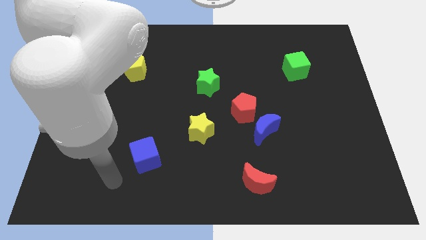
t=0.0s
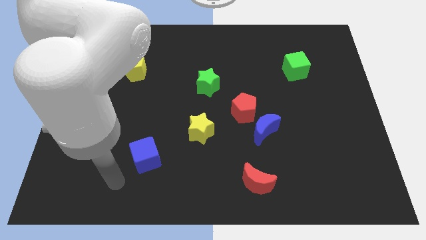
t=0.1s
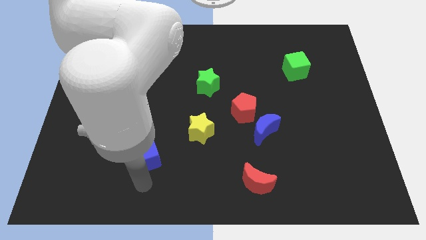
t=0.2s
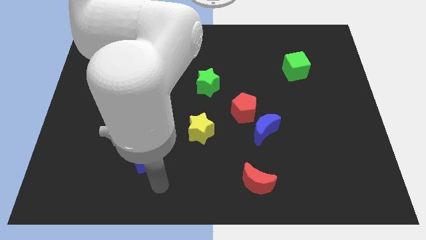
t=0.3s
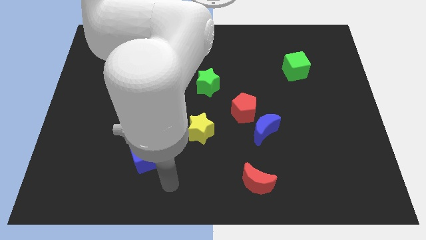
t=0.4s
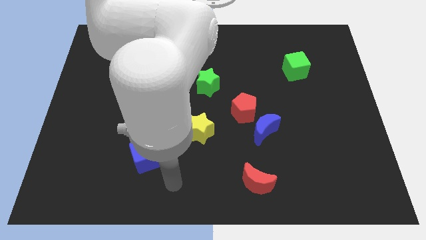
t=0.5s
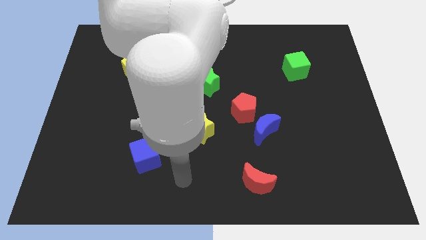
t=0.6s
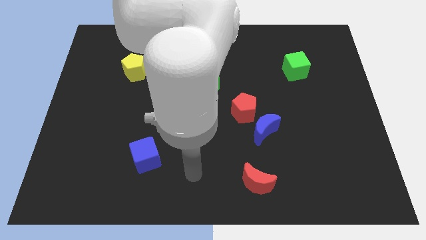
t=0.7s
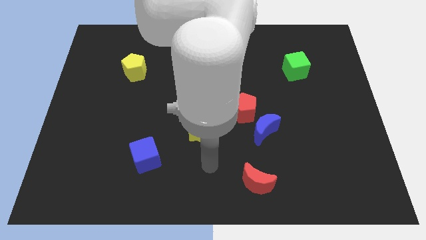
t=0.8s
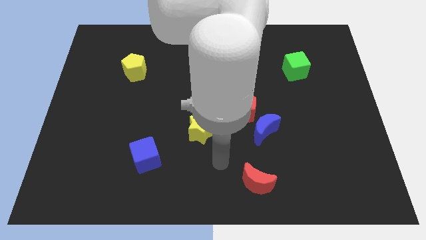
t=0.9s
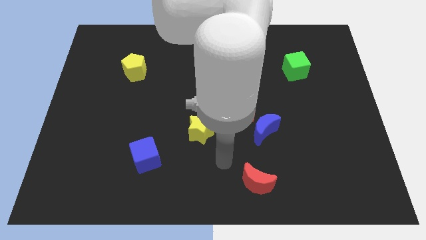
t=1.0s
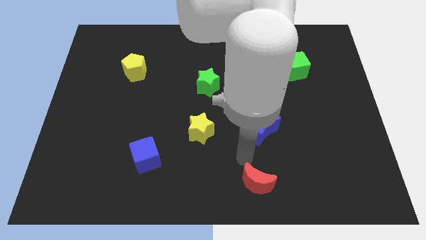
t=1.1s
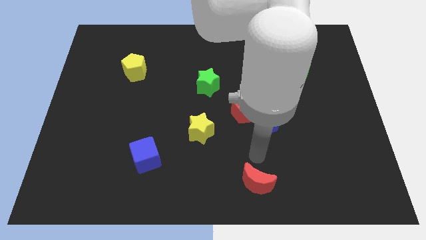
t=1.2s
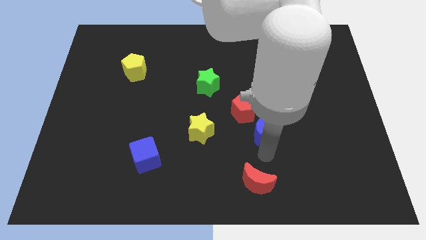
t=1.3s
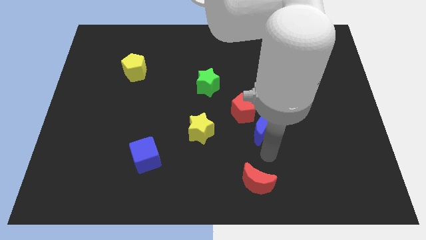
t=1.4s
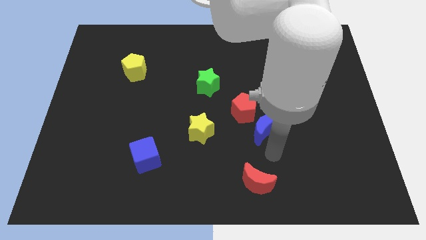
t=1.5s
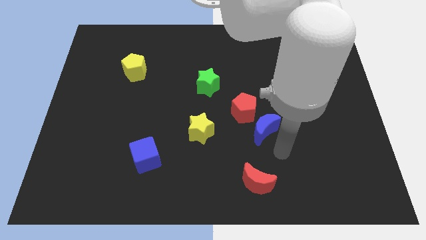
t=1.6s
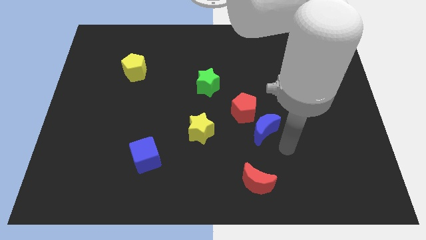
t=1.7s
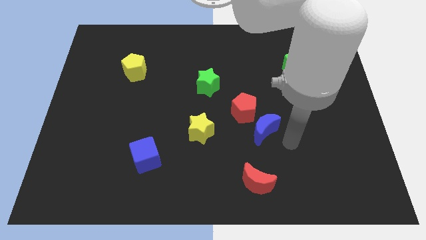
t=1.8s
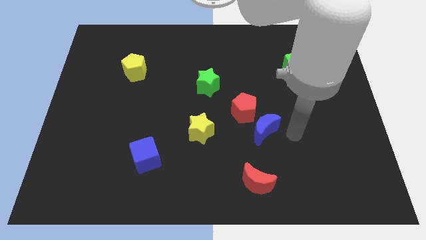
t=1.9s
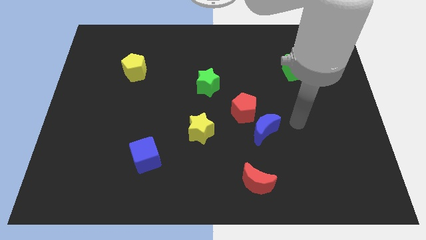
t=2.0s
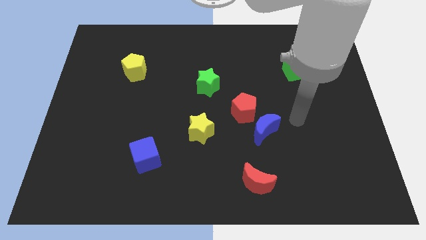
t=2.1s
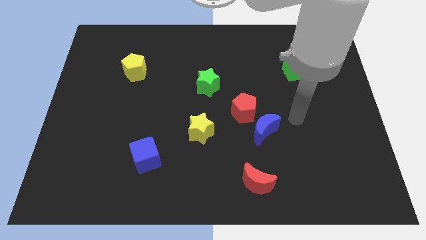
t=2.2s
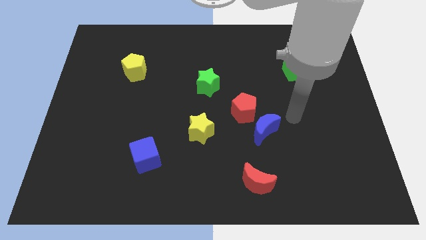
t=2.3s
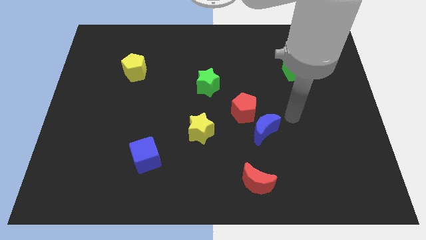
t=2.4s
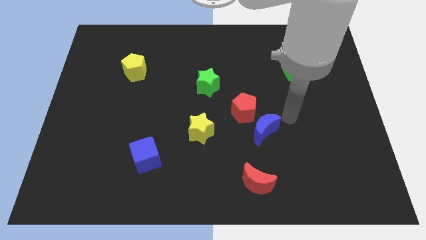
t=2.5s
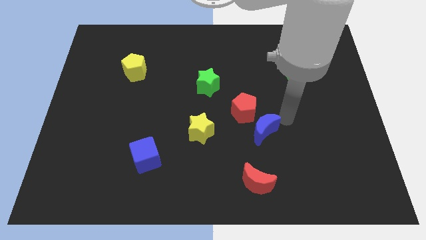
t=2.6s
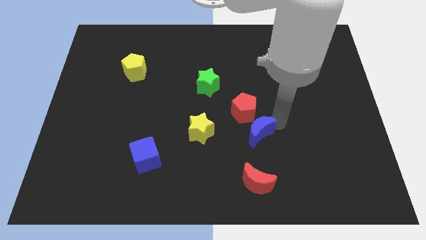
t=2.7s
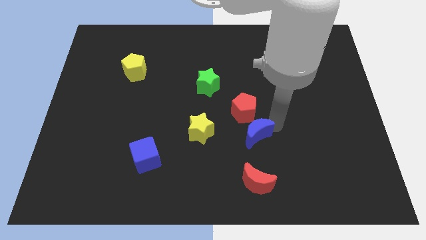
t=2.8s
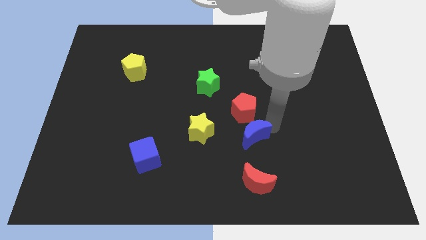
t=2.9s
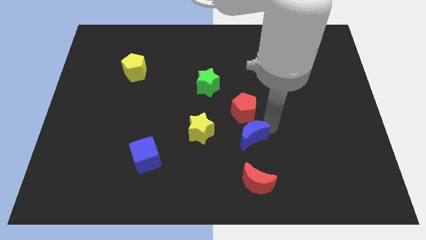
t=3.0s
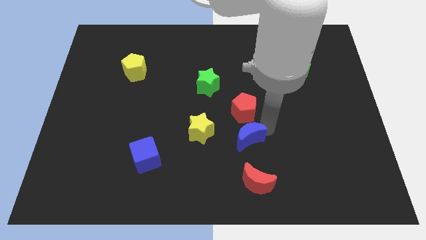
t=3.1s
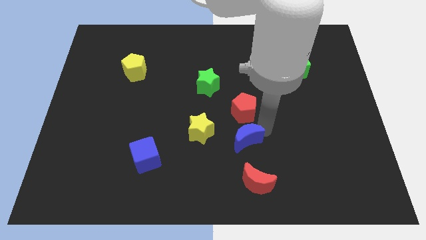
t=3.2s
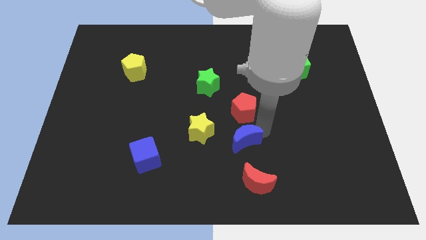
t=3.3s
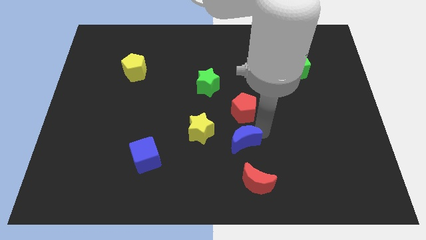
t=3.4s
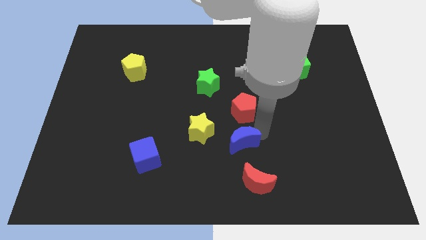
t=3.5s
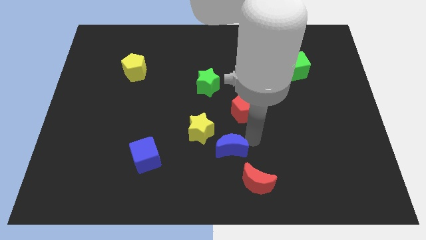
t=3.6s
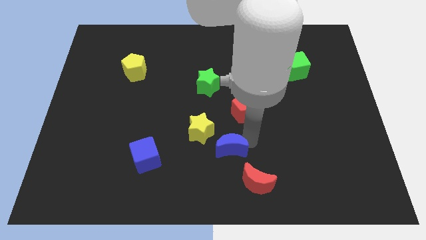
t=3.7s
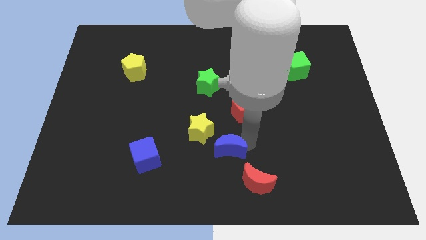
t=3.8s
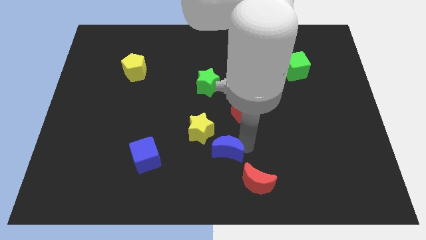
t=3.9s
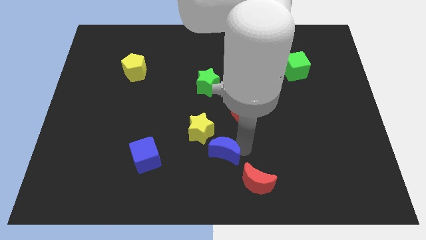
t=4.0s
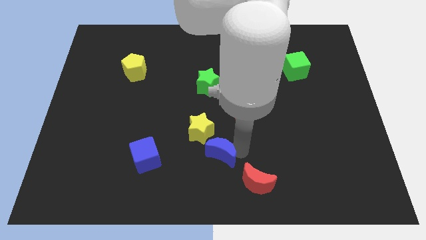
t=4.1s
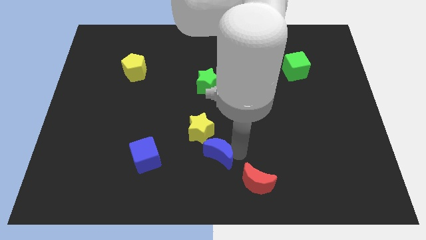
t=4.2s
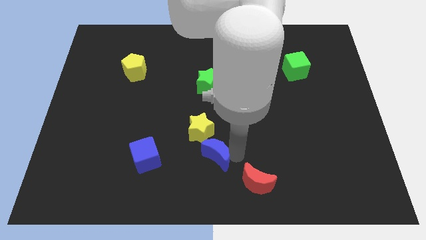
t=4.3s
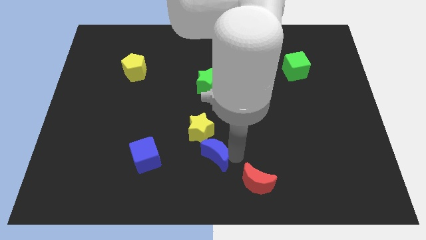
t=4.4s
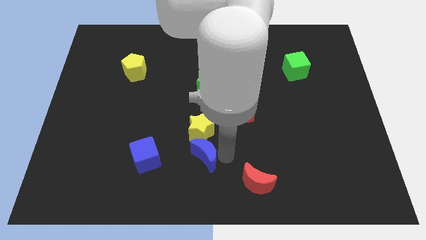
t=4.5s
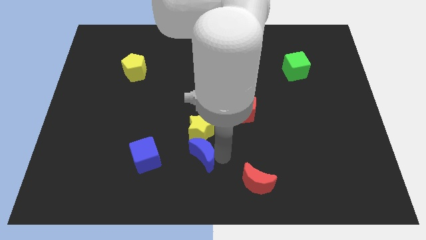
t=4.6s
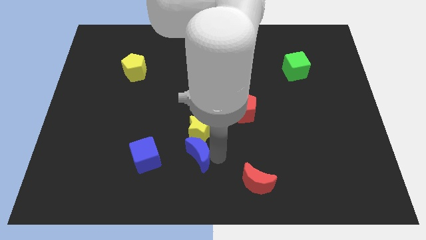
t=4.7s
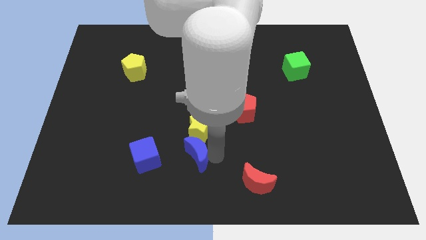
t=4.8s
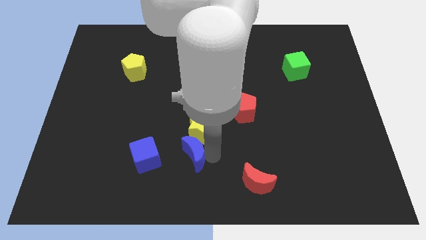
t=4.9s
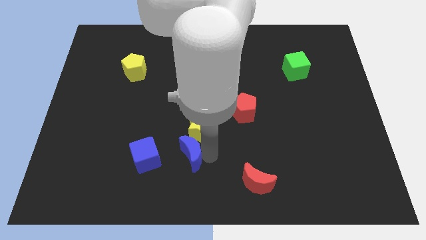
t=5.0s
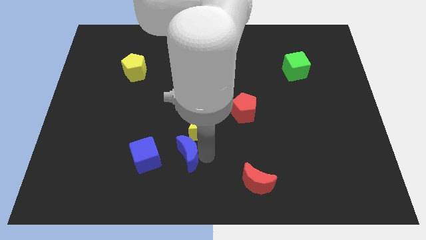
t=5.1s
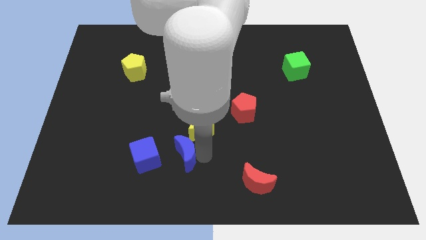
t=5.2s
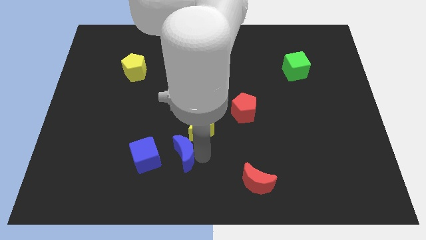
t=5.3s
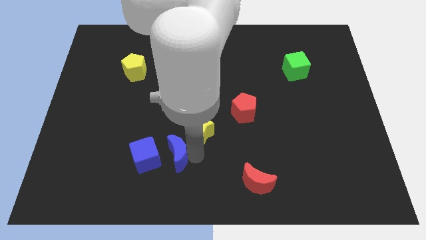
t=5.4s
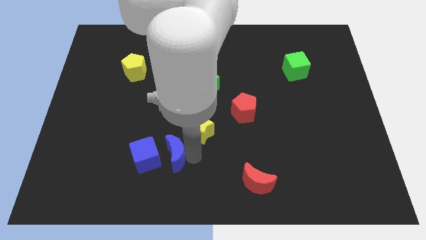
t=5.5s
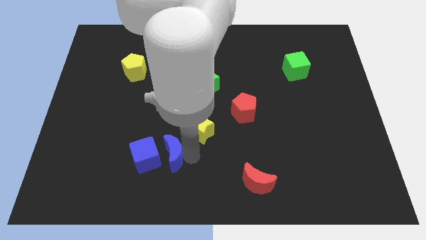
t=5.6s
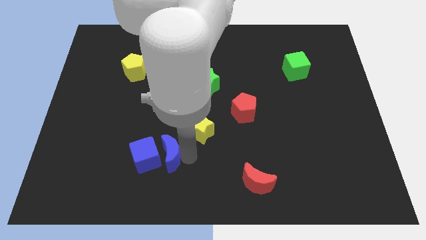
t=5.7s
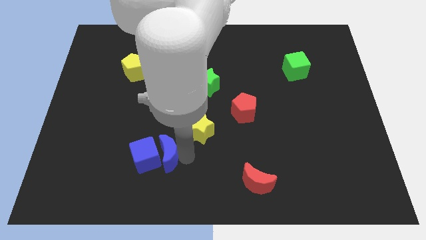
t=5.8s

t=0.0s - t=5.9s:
move the blue moon next to the blue cube

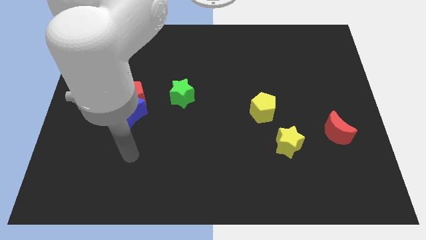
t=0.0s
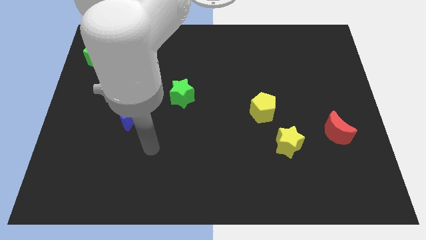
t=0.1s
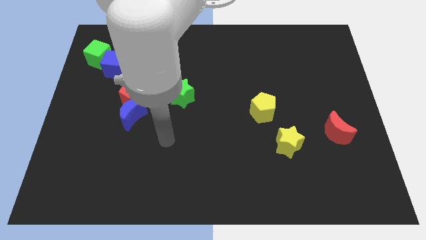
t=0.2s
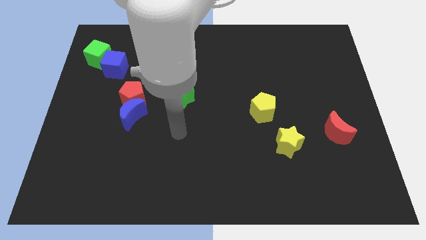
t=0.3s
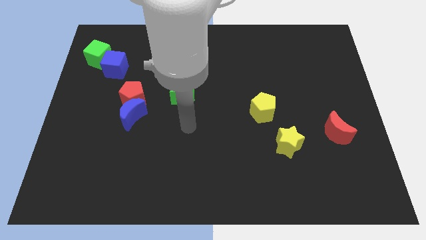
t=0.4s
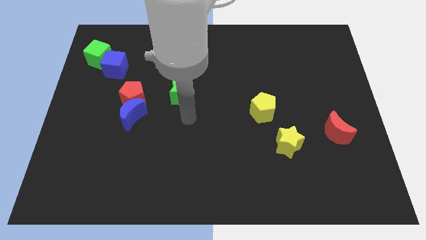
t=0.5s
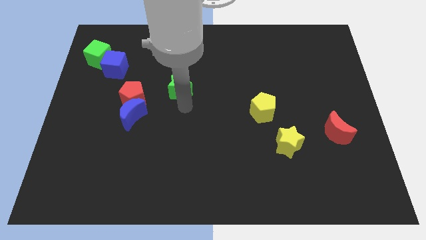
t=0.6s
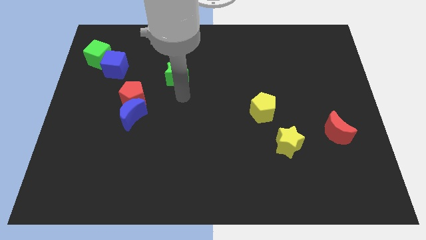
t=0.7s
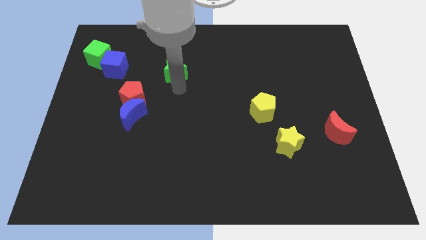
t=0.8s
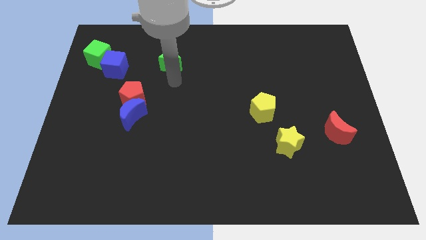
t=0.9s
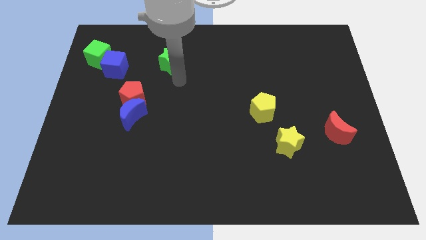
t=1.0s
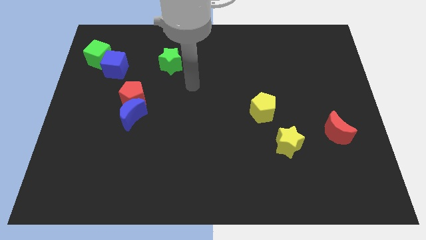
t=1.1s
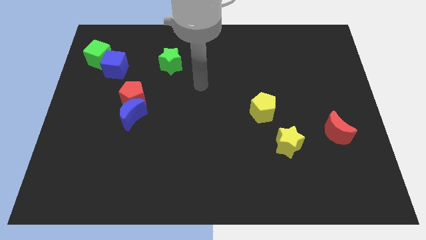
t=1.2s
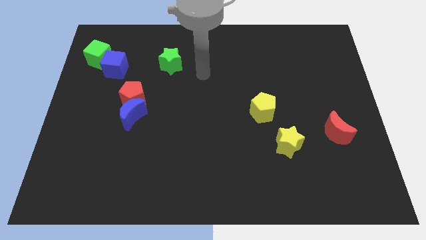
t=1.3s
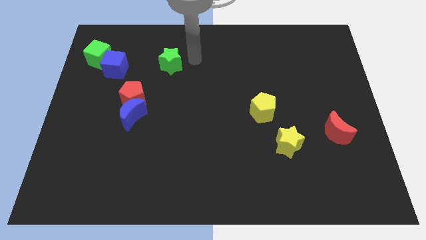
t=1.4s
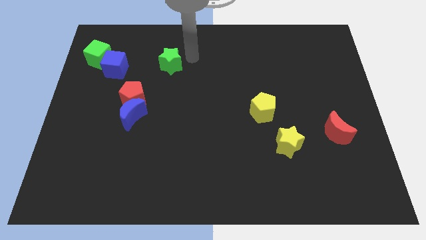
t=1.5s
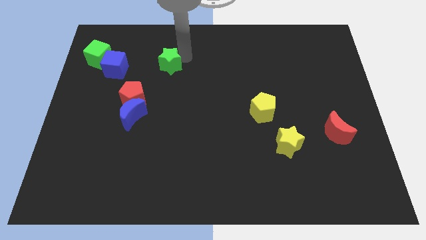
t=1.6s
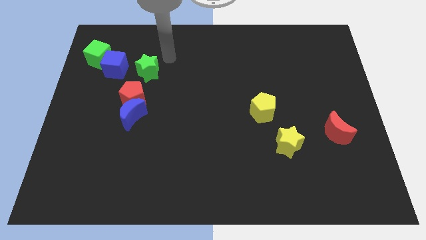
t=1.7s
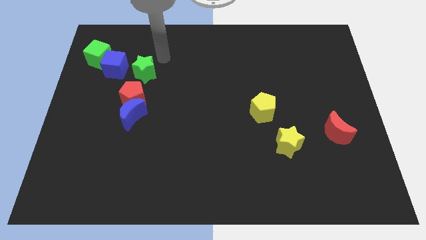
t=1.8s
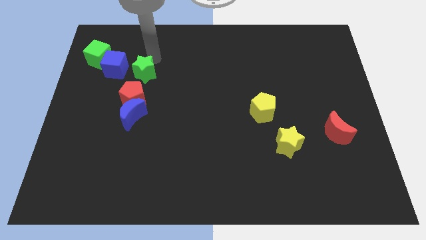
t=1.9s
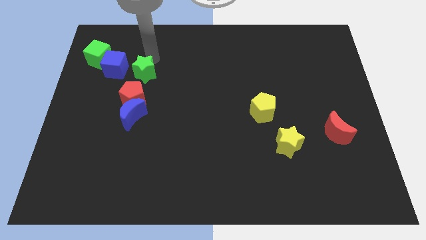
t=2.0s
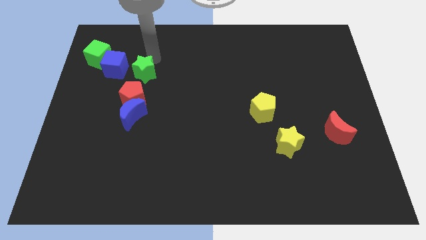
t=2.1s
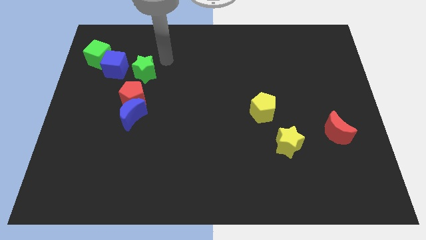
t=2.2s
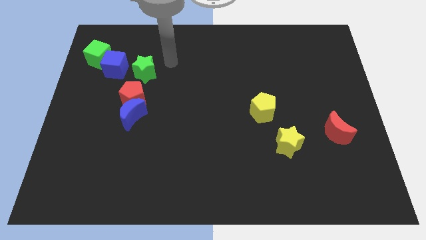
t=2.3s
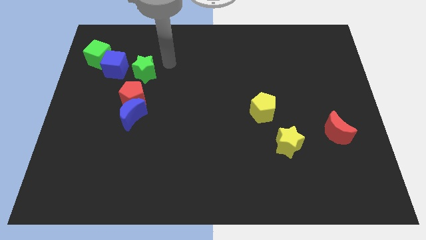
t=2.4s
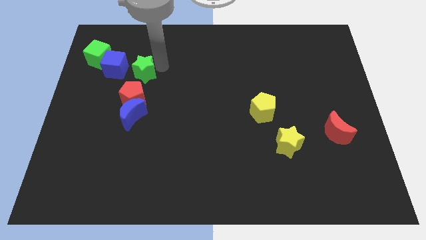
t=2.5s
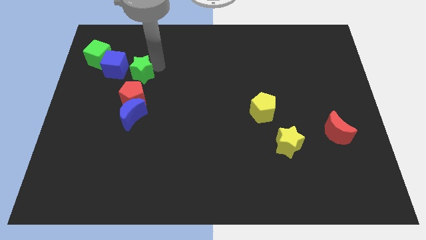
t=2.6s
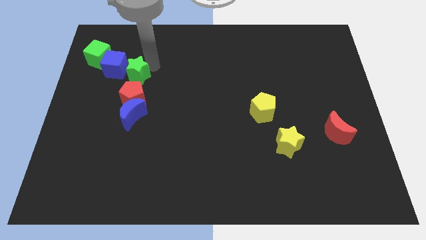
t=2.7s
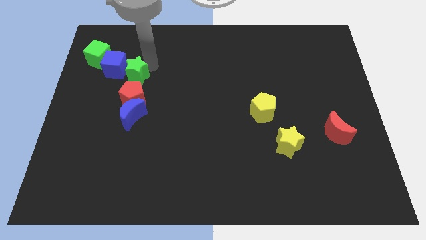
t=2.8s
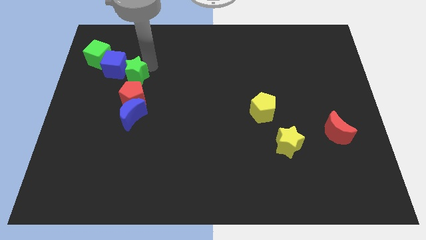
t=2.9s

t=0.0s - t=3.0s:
push the green star close to the blue cube
